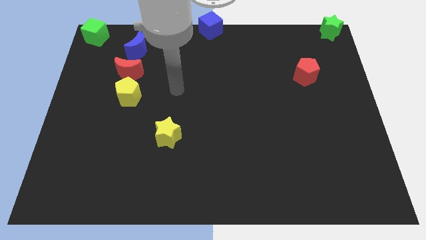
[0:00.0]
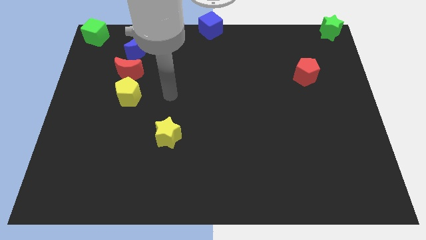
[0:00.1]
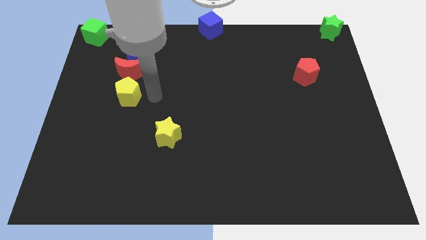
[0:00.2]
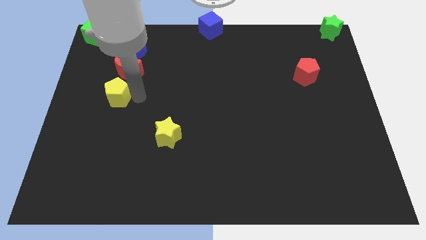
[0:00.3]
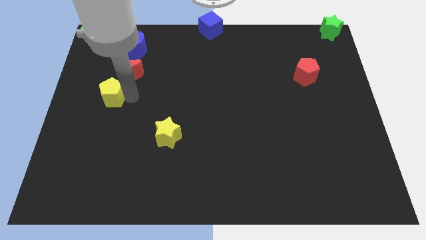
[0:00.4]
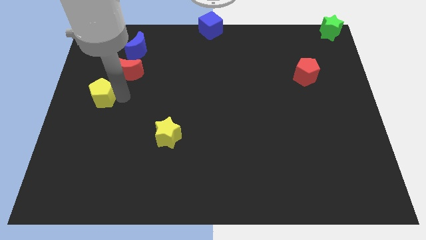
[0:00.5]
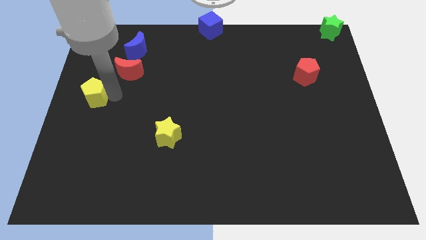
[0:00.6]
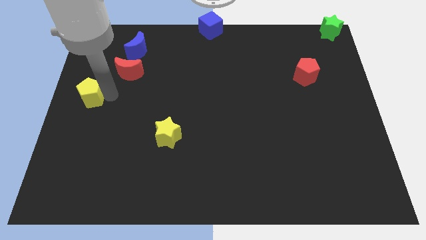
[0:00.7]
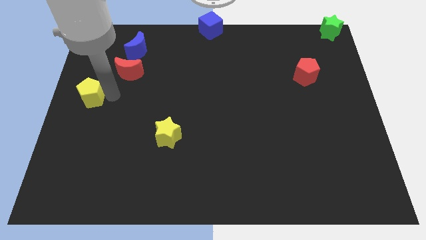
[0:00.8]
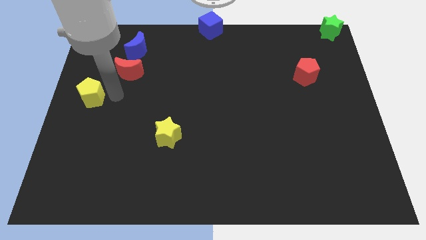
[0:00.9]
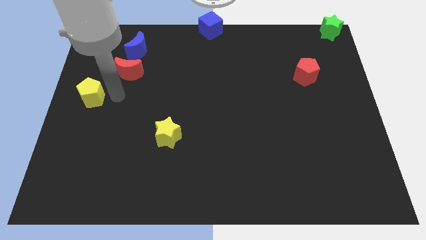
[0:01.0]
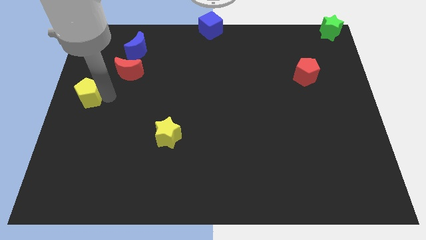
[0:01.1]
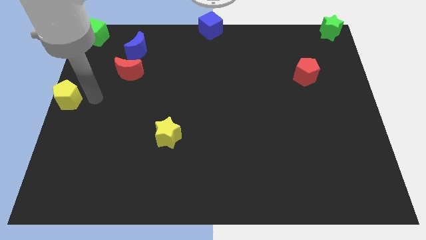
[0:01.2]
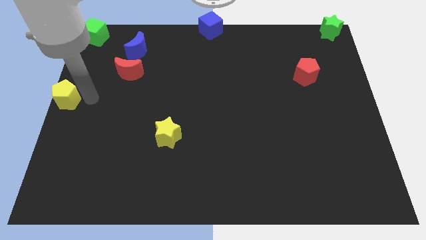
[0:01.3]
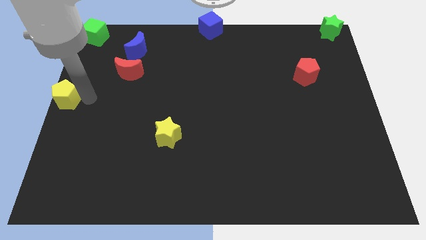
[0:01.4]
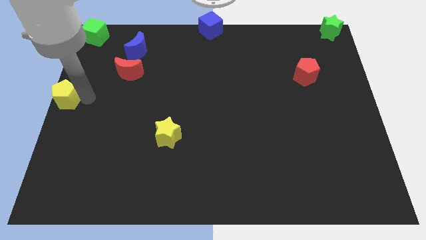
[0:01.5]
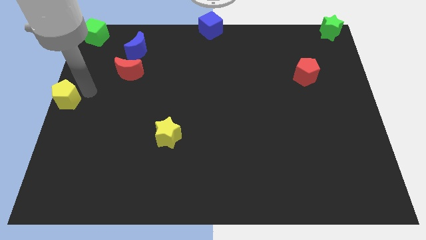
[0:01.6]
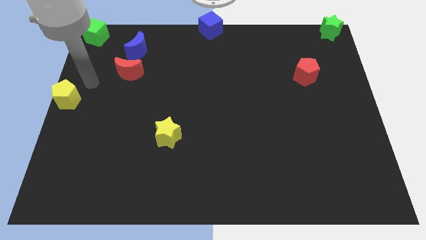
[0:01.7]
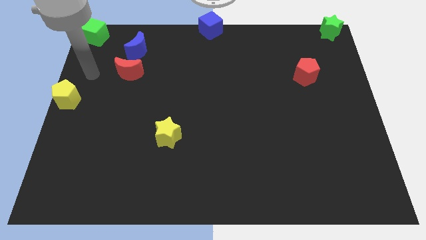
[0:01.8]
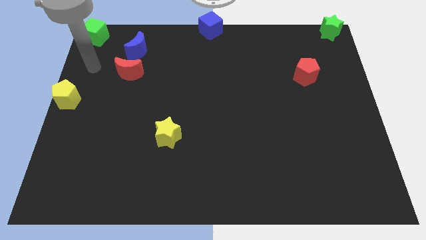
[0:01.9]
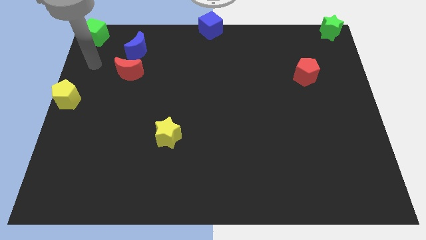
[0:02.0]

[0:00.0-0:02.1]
slide yellow pentagon to the center left

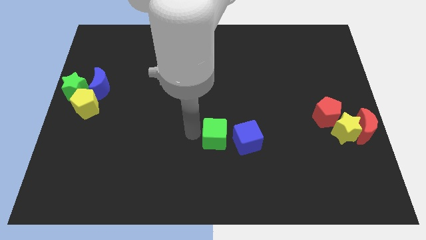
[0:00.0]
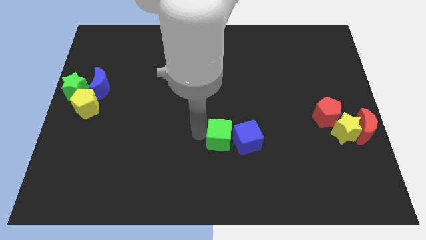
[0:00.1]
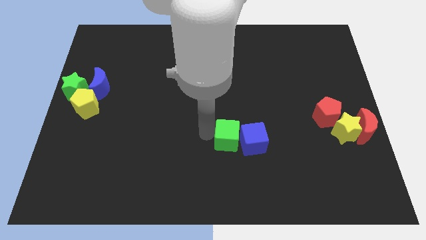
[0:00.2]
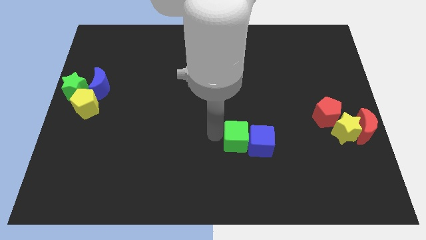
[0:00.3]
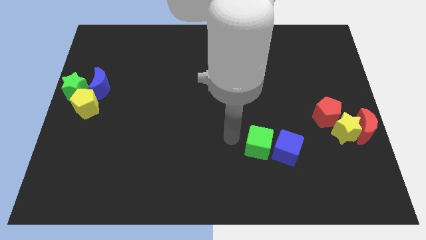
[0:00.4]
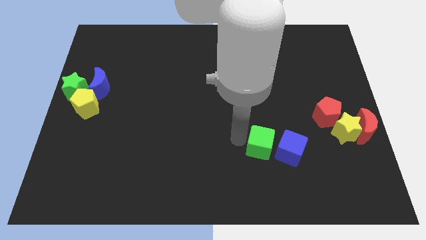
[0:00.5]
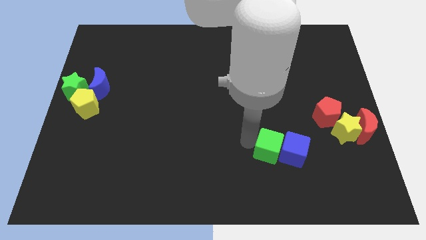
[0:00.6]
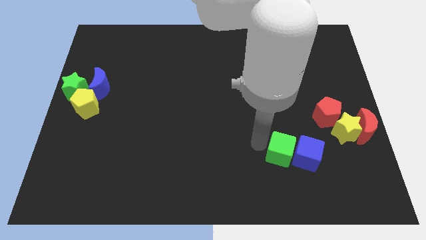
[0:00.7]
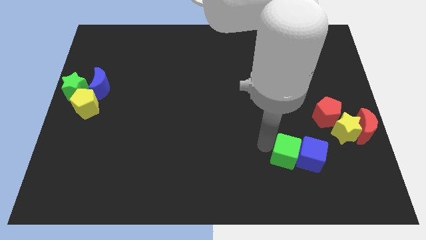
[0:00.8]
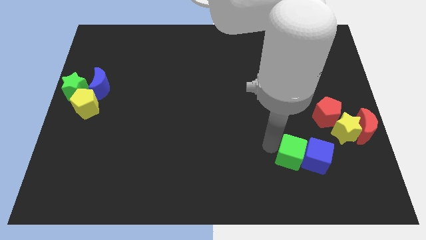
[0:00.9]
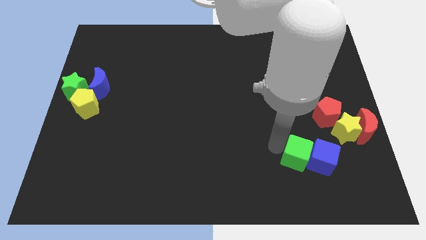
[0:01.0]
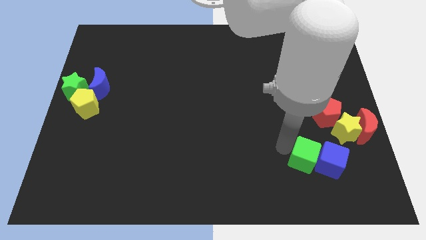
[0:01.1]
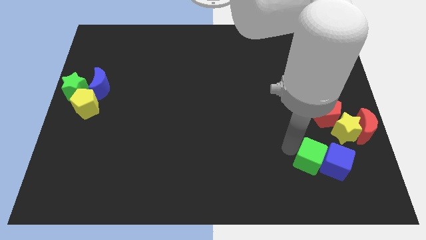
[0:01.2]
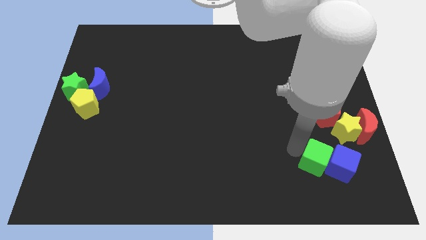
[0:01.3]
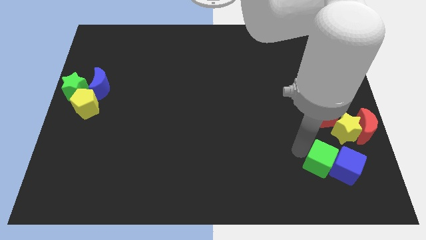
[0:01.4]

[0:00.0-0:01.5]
push green cube below red pentagon

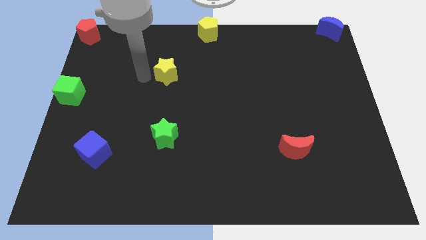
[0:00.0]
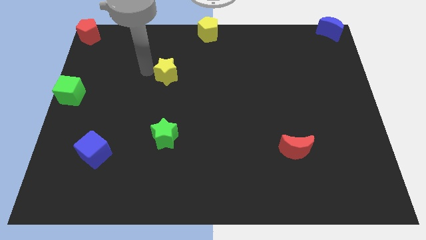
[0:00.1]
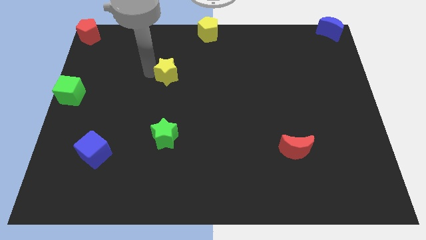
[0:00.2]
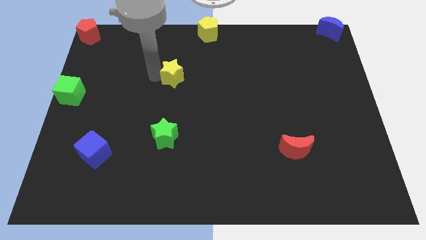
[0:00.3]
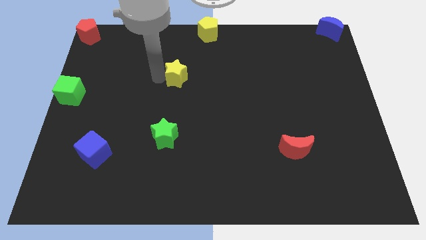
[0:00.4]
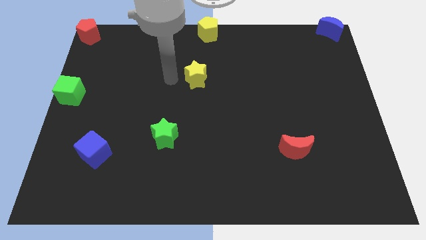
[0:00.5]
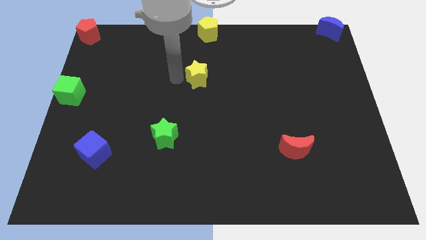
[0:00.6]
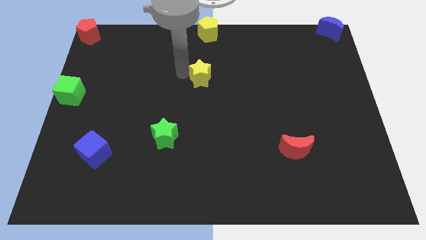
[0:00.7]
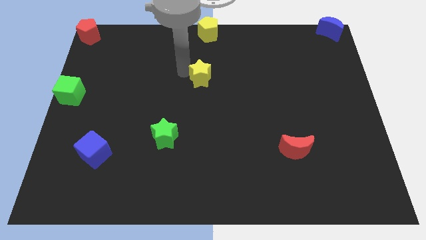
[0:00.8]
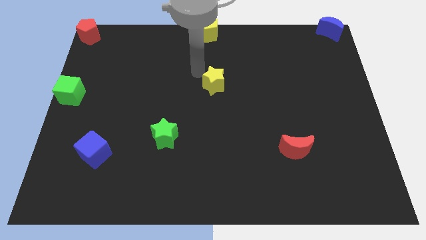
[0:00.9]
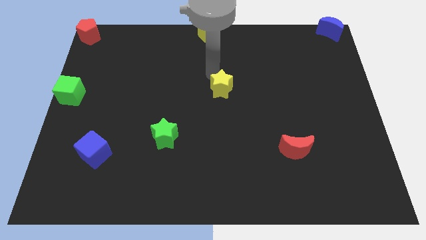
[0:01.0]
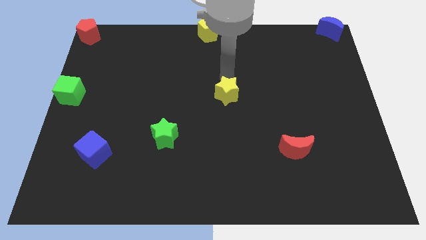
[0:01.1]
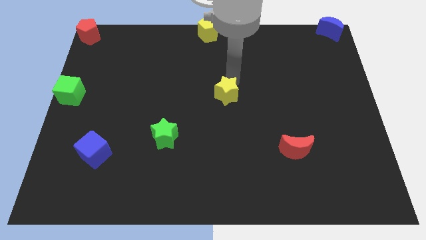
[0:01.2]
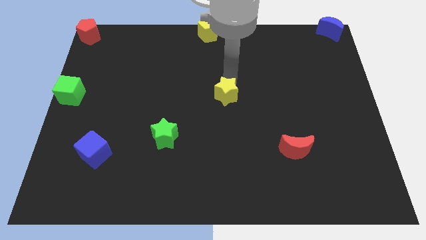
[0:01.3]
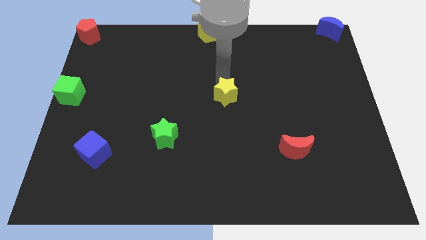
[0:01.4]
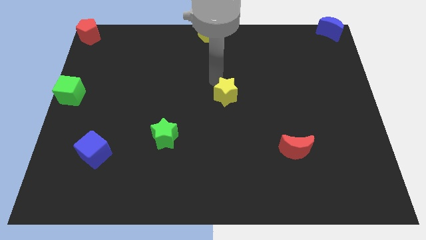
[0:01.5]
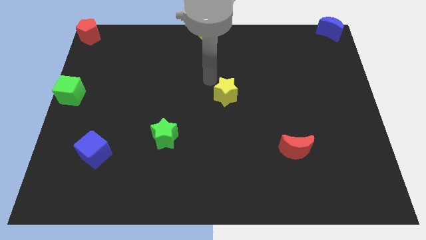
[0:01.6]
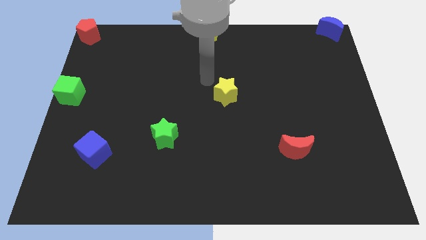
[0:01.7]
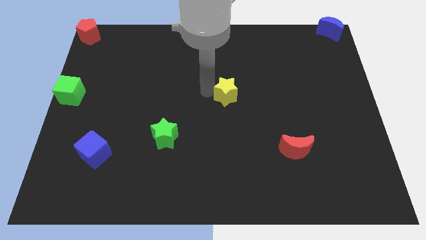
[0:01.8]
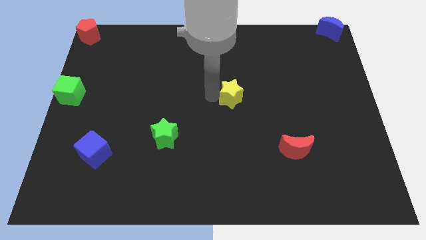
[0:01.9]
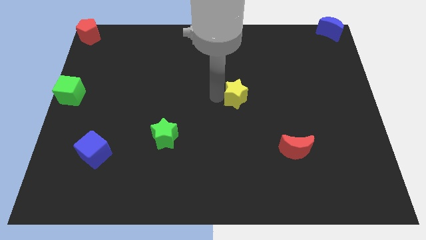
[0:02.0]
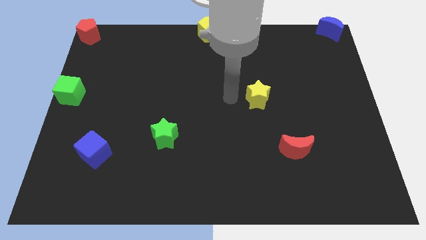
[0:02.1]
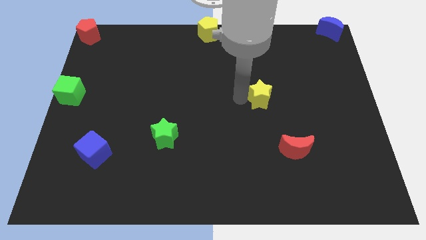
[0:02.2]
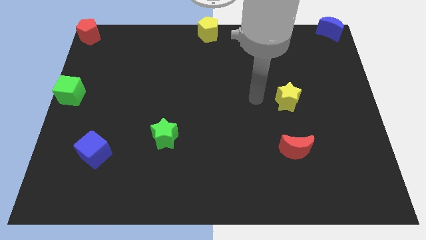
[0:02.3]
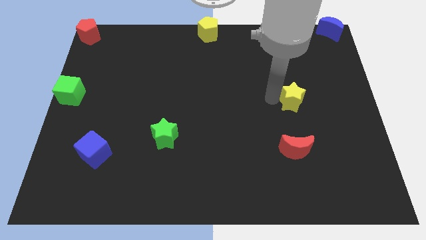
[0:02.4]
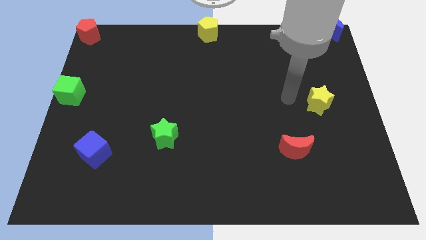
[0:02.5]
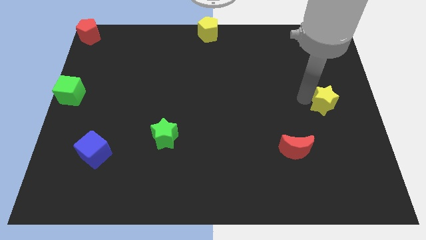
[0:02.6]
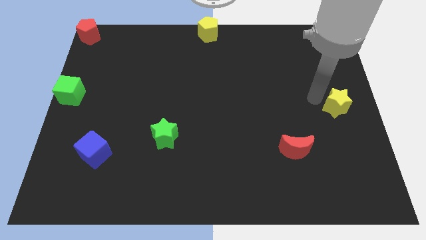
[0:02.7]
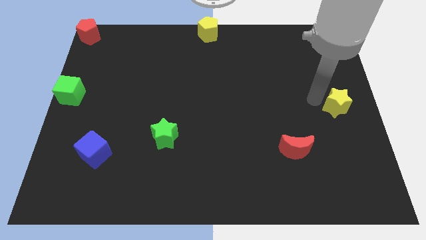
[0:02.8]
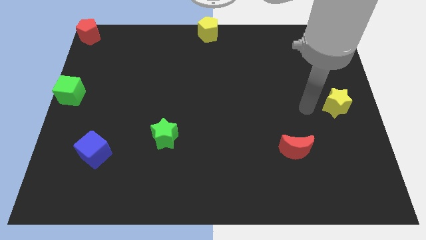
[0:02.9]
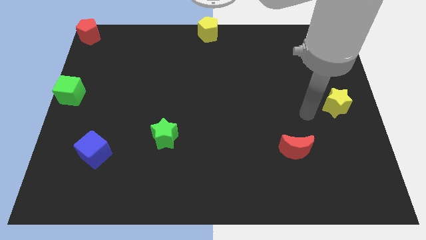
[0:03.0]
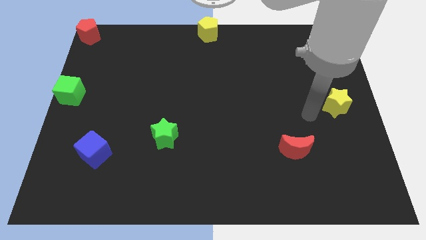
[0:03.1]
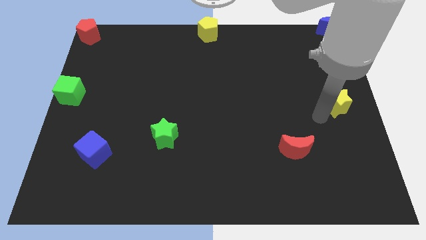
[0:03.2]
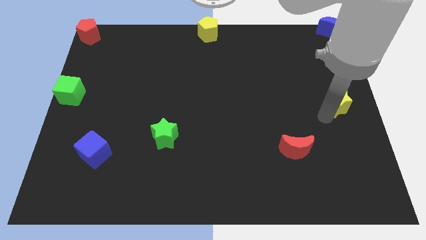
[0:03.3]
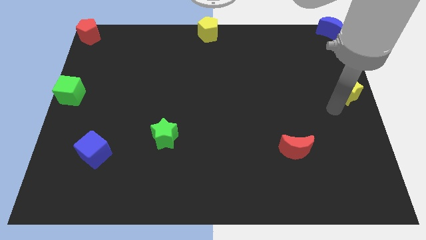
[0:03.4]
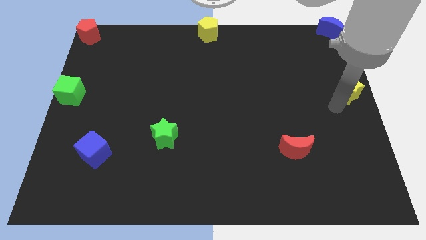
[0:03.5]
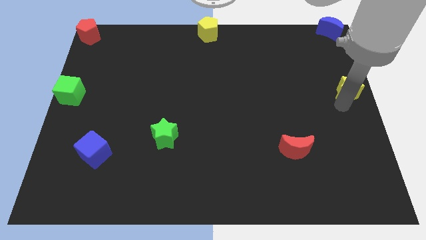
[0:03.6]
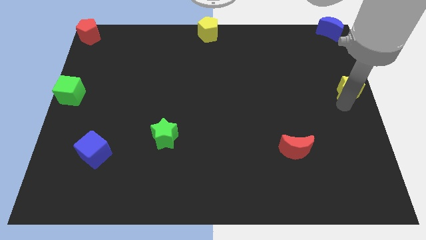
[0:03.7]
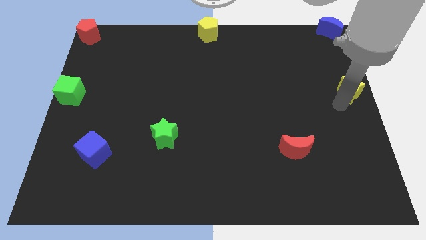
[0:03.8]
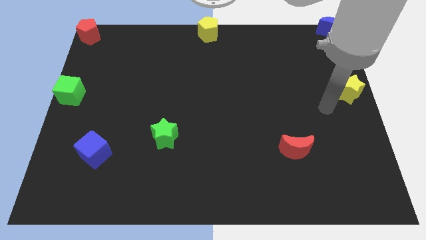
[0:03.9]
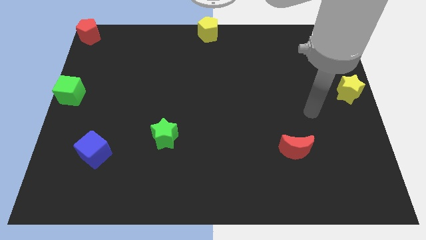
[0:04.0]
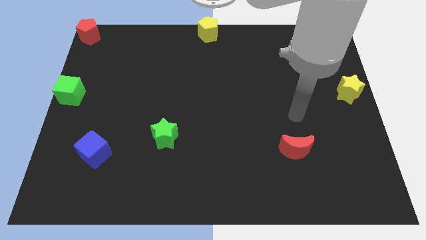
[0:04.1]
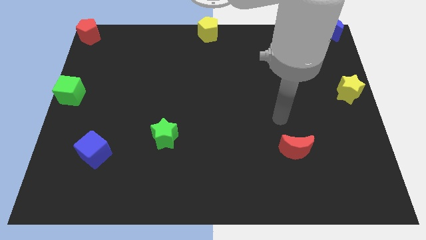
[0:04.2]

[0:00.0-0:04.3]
put the yellow star on the right center of the board

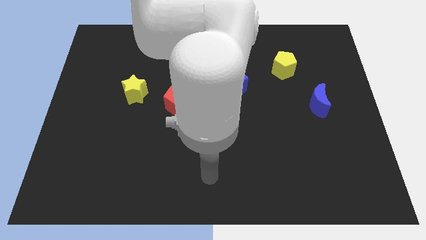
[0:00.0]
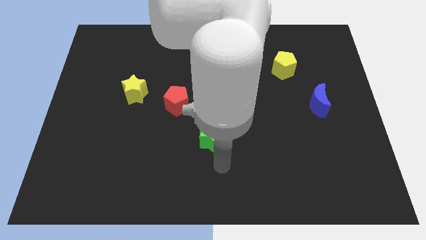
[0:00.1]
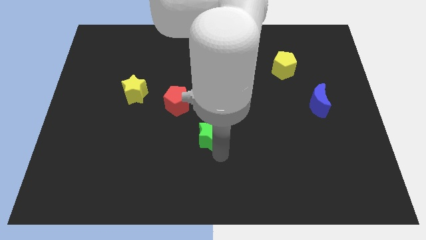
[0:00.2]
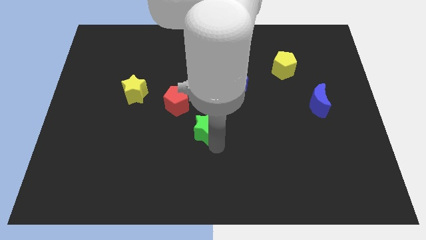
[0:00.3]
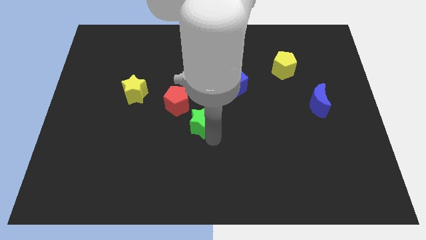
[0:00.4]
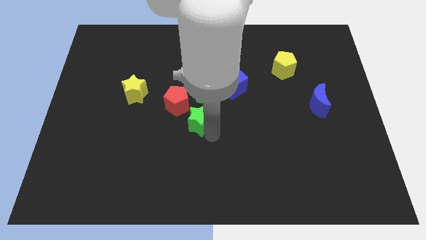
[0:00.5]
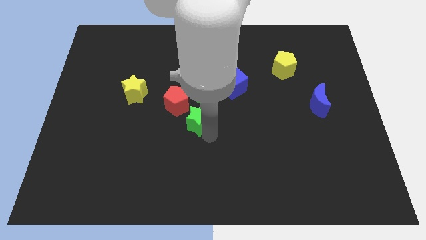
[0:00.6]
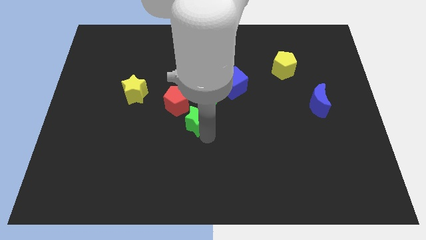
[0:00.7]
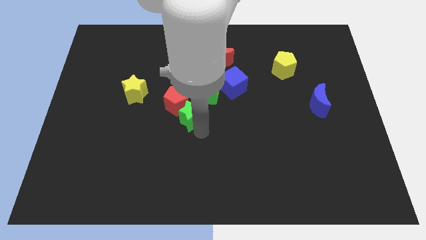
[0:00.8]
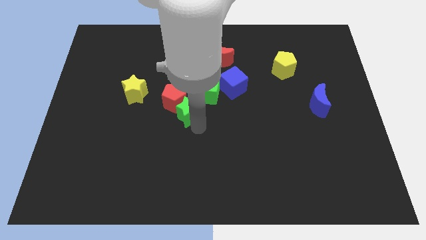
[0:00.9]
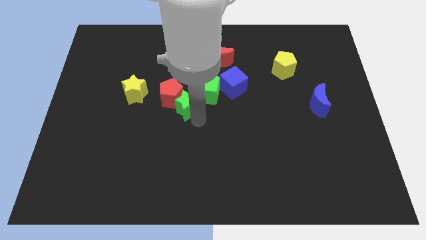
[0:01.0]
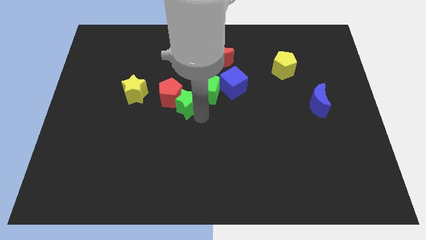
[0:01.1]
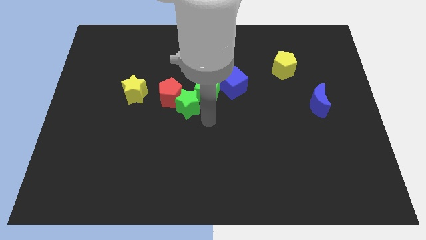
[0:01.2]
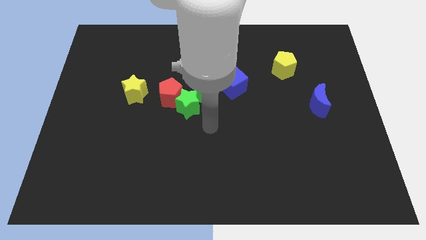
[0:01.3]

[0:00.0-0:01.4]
push the green star into the red pentagon
